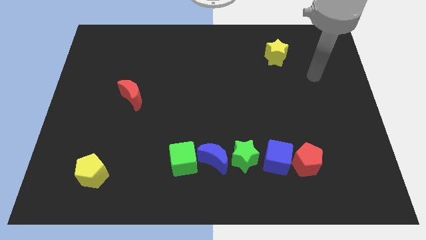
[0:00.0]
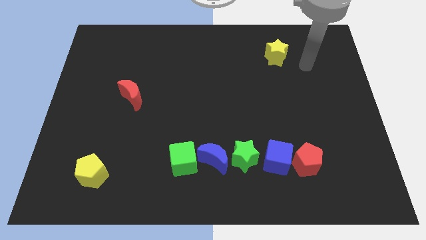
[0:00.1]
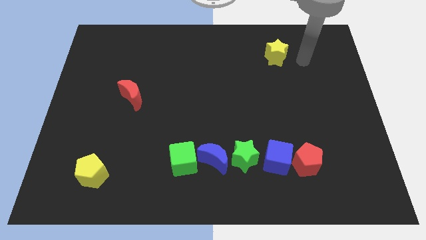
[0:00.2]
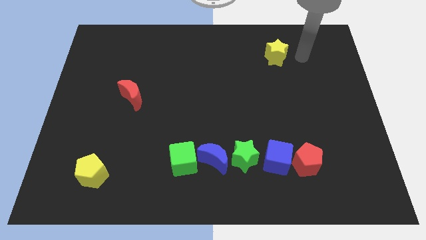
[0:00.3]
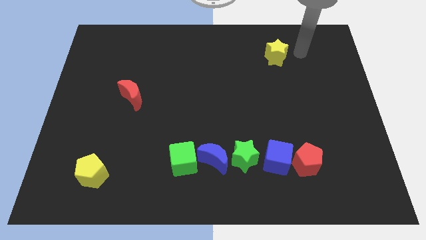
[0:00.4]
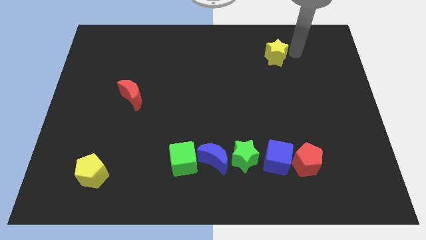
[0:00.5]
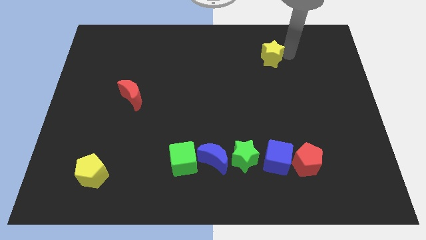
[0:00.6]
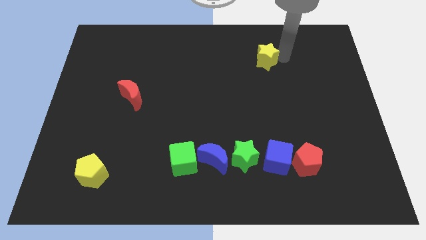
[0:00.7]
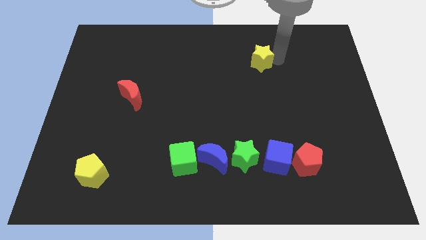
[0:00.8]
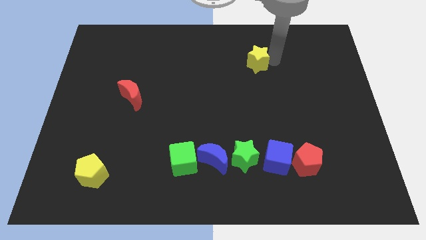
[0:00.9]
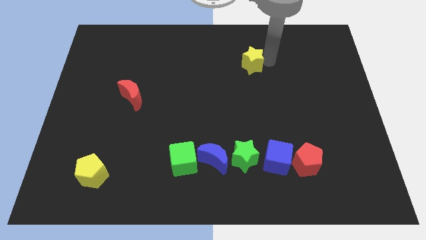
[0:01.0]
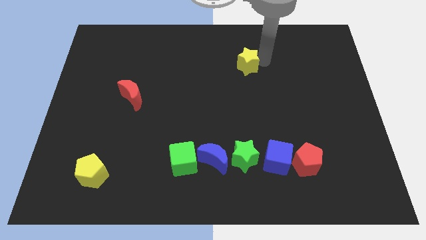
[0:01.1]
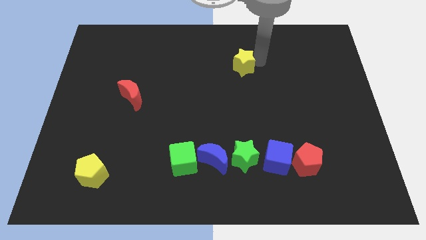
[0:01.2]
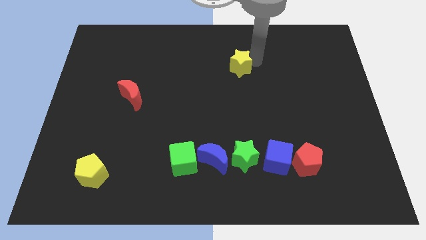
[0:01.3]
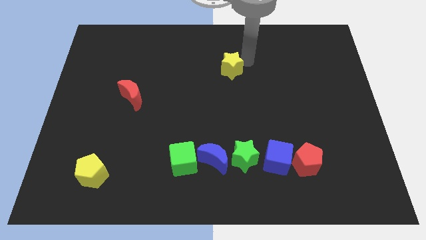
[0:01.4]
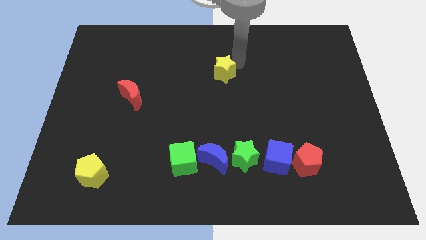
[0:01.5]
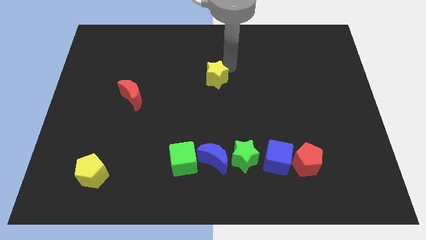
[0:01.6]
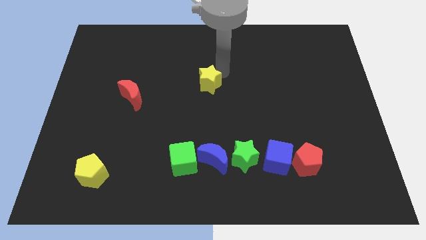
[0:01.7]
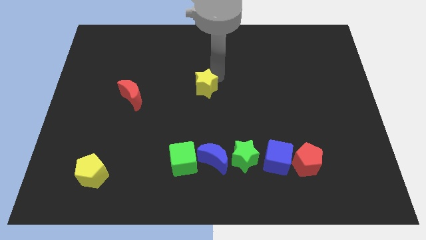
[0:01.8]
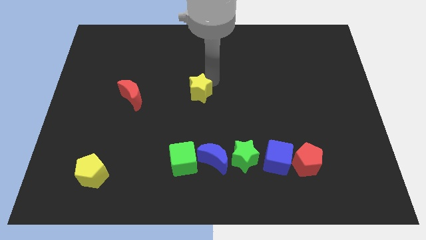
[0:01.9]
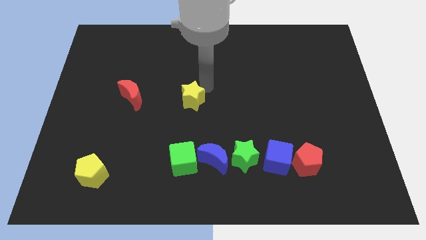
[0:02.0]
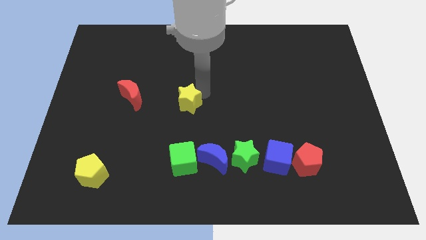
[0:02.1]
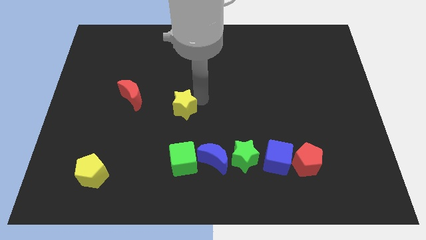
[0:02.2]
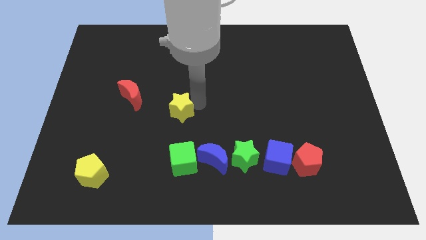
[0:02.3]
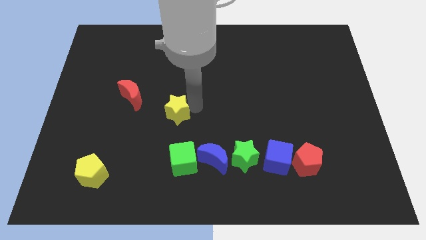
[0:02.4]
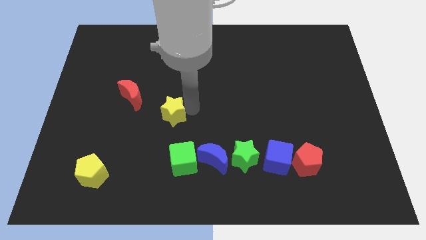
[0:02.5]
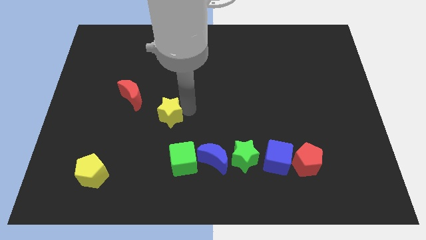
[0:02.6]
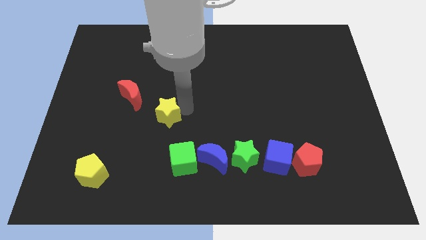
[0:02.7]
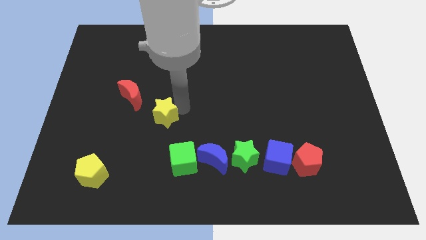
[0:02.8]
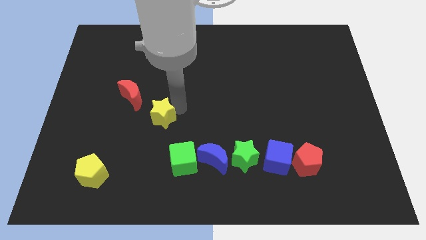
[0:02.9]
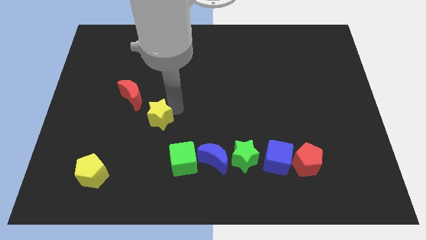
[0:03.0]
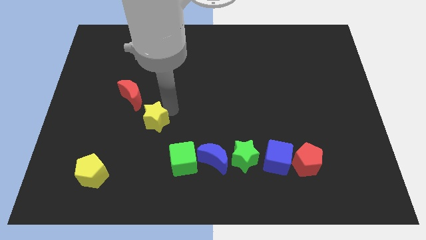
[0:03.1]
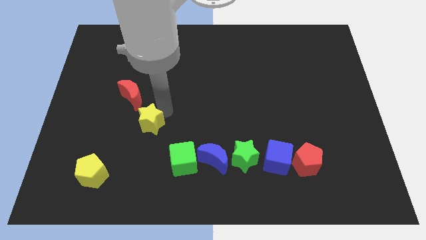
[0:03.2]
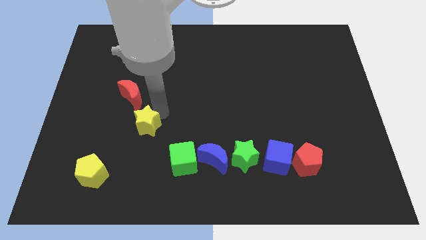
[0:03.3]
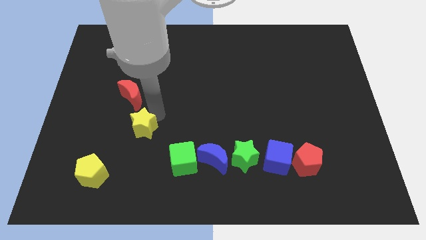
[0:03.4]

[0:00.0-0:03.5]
put the yellow star diagonally top left to the green cube

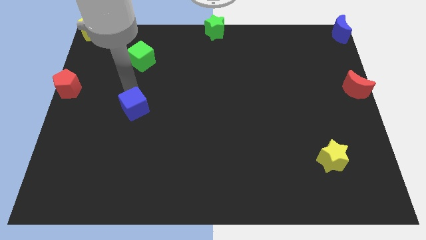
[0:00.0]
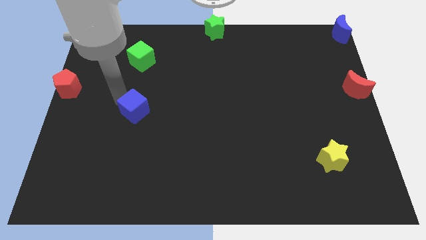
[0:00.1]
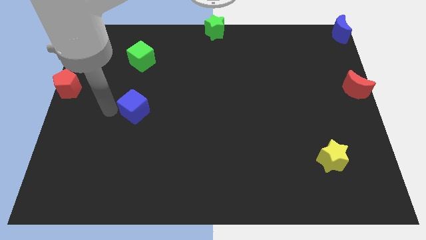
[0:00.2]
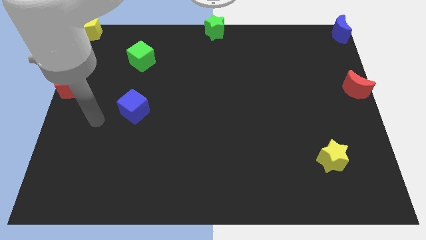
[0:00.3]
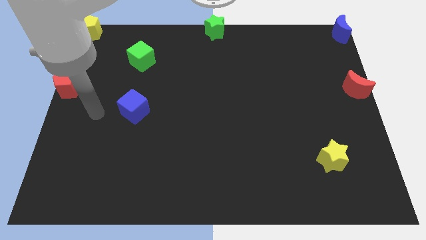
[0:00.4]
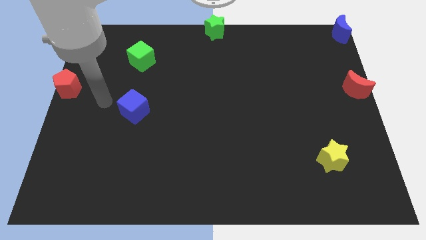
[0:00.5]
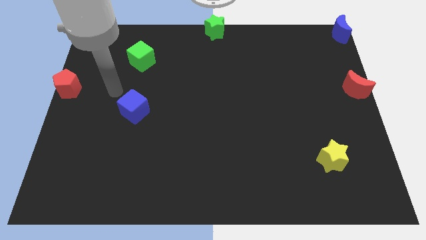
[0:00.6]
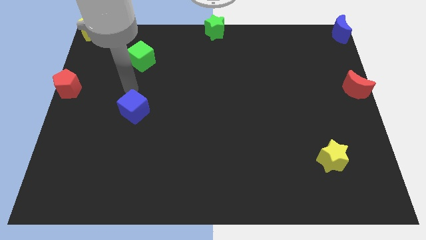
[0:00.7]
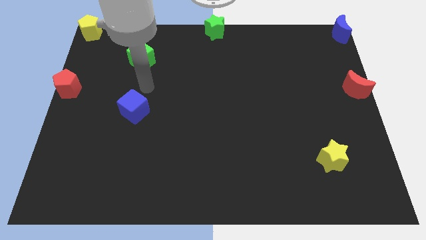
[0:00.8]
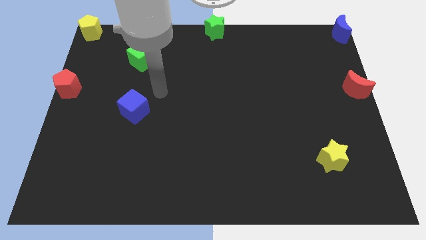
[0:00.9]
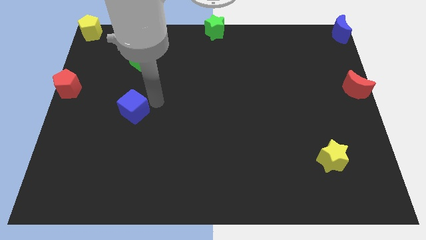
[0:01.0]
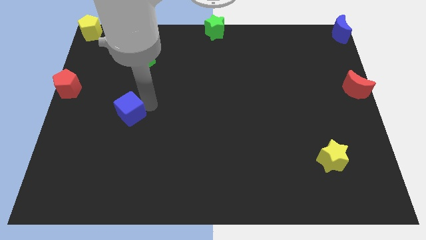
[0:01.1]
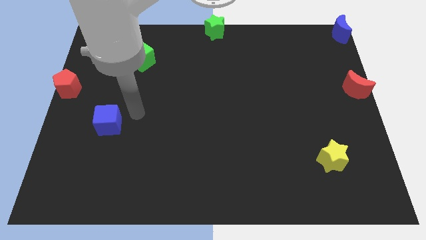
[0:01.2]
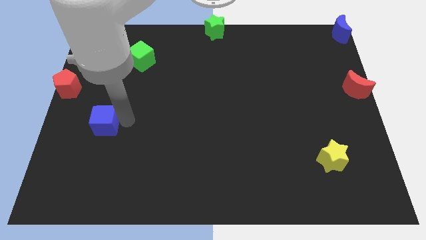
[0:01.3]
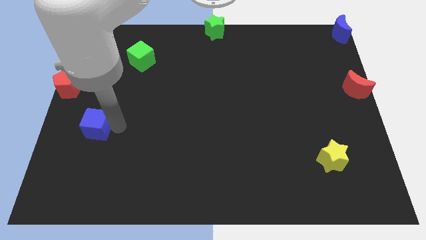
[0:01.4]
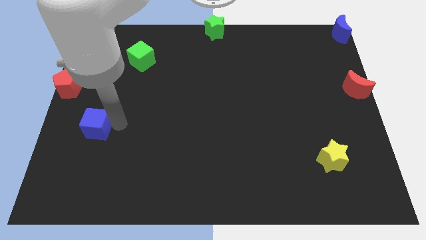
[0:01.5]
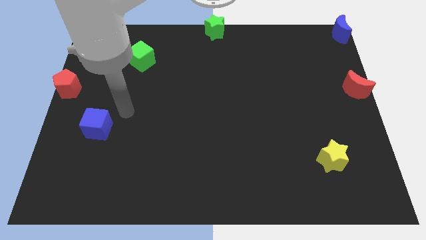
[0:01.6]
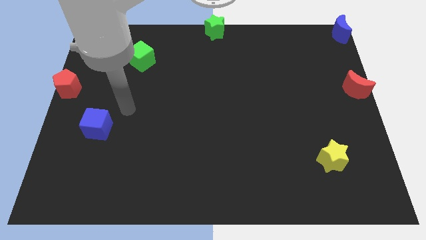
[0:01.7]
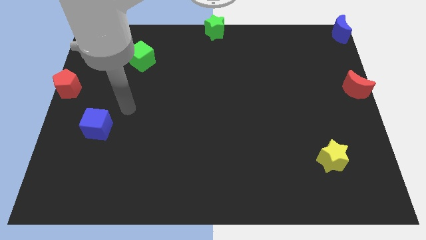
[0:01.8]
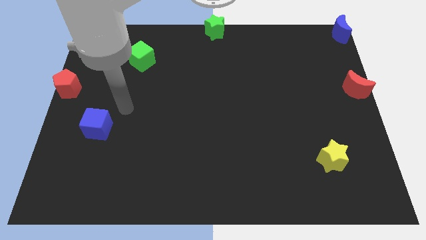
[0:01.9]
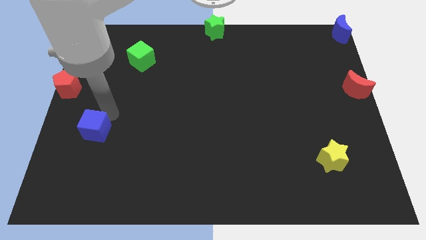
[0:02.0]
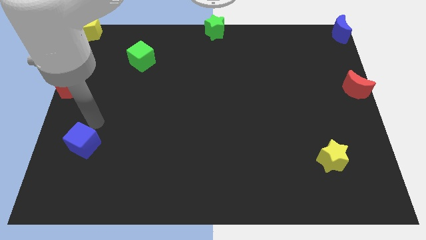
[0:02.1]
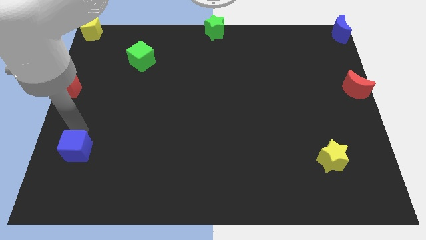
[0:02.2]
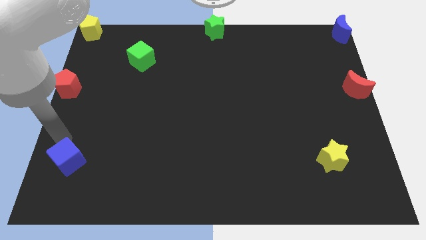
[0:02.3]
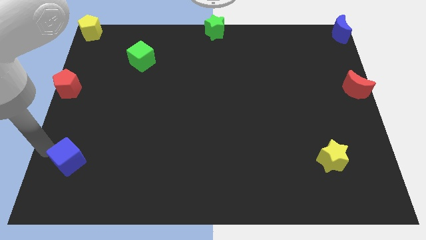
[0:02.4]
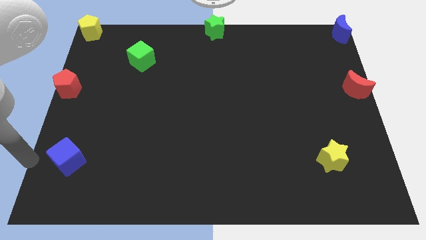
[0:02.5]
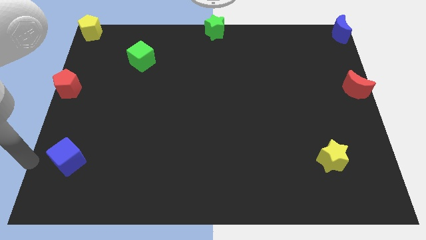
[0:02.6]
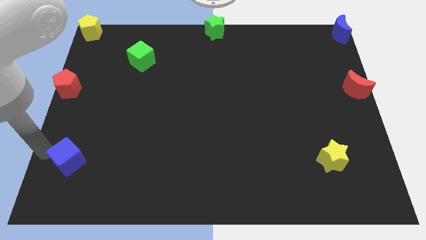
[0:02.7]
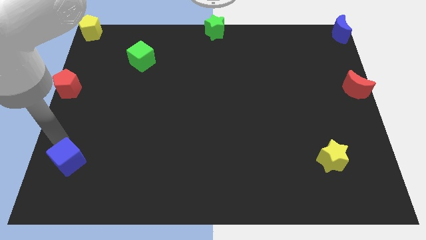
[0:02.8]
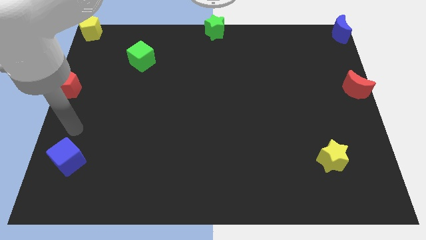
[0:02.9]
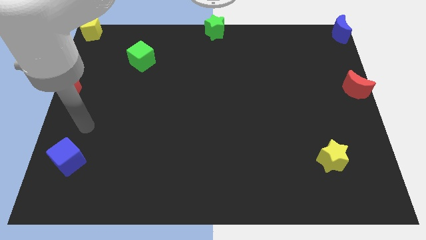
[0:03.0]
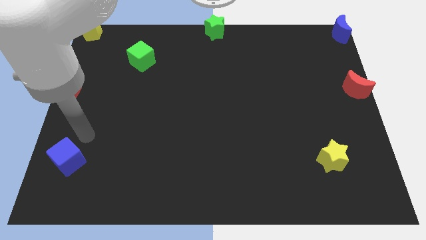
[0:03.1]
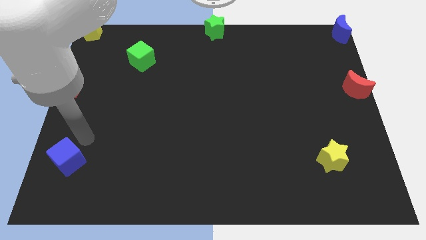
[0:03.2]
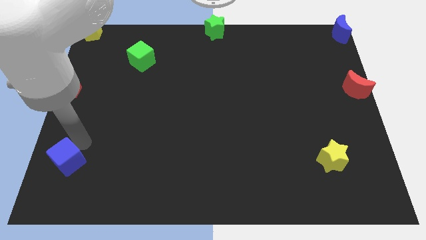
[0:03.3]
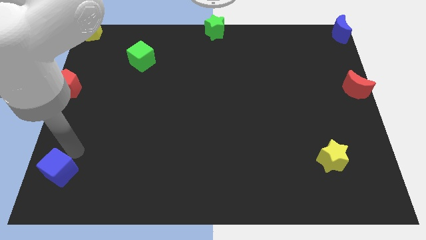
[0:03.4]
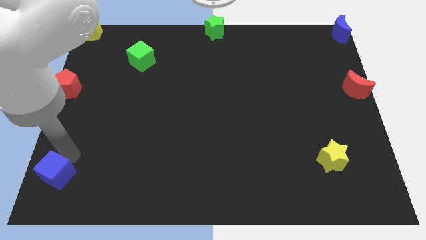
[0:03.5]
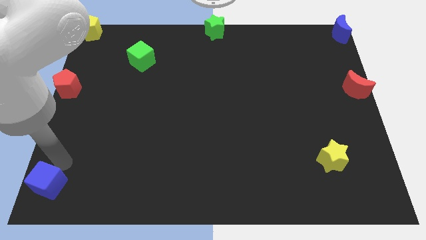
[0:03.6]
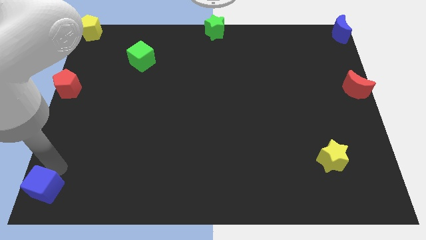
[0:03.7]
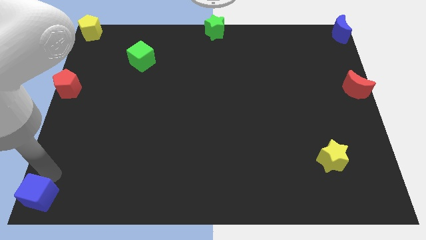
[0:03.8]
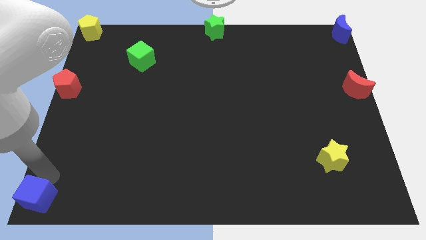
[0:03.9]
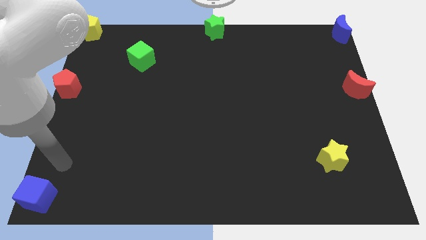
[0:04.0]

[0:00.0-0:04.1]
push the blue cube to the bottom left corner

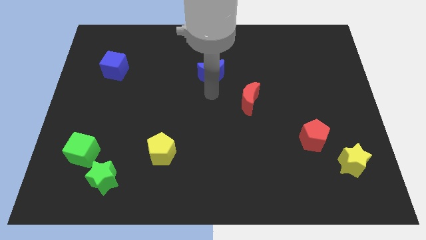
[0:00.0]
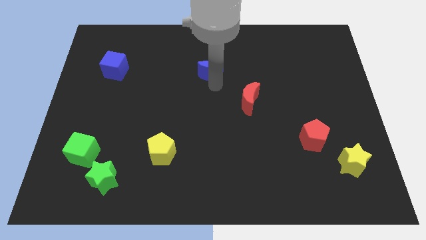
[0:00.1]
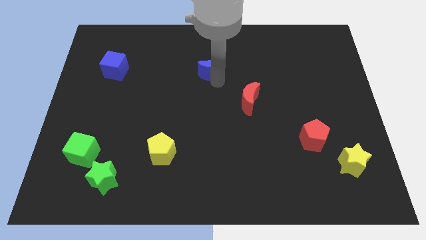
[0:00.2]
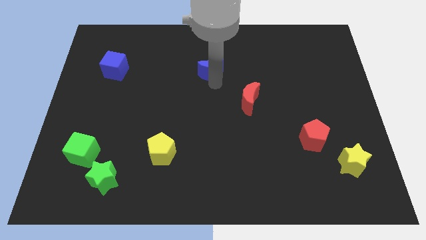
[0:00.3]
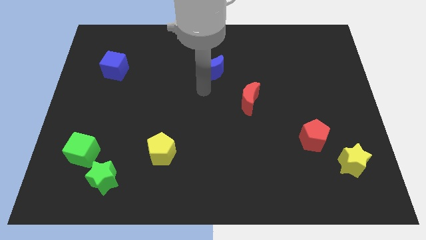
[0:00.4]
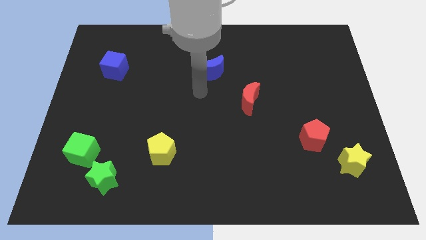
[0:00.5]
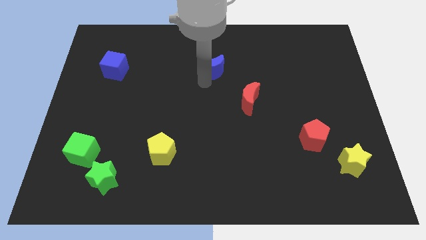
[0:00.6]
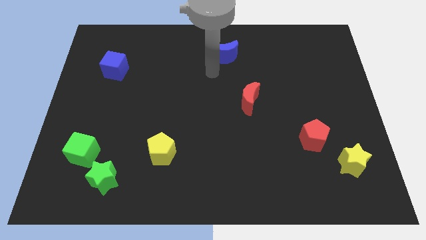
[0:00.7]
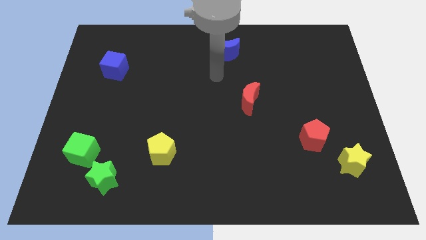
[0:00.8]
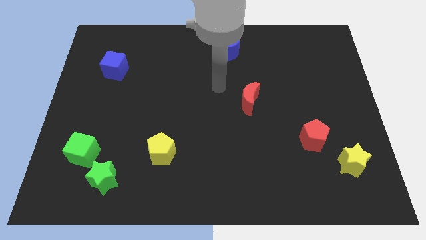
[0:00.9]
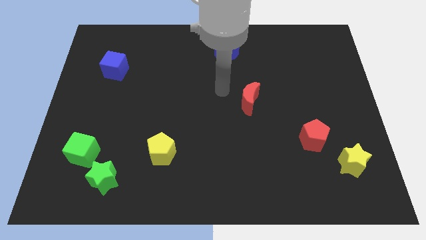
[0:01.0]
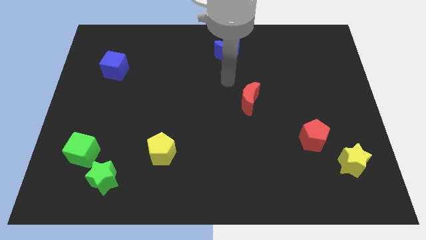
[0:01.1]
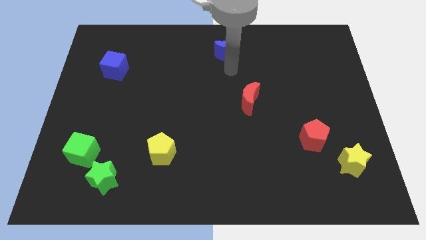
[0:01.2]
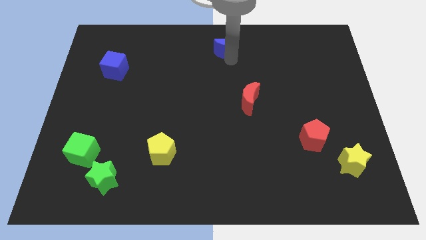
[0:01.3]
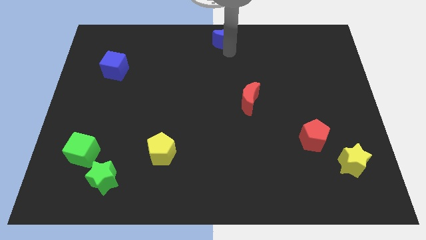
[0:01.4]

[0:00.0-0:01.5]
place the blue moon at the top center of the board
